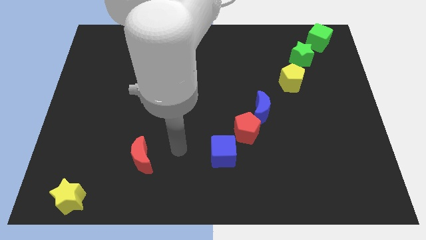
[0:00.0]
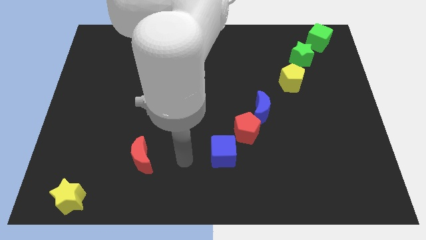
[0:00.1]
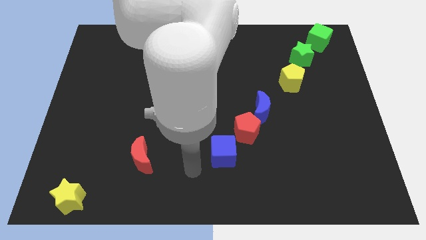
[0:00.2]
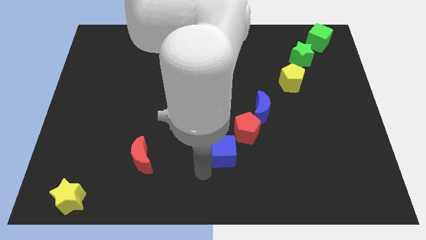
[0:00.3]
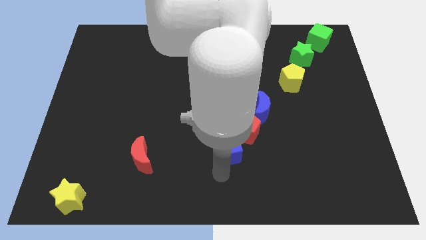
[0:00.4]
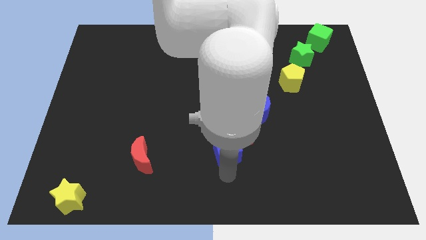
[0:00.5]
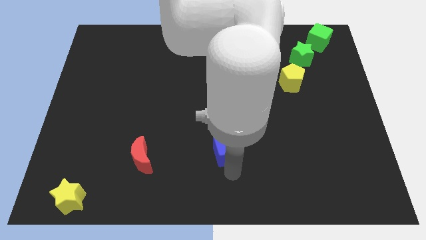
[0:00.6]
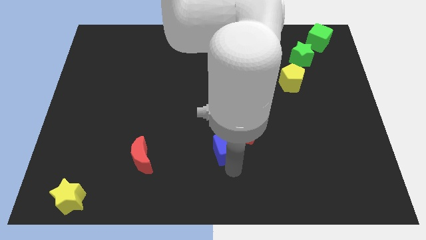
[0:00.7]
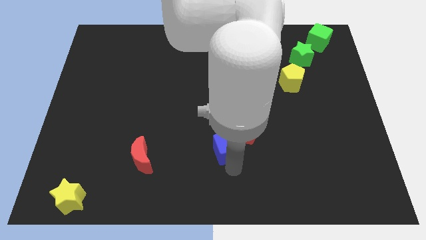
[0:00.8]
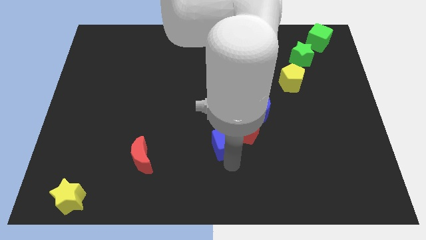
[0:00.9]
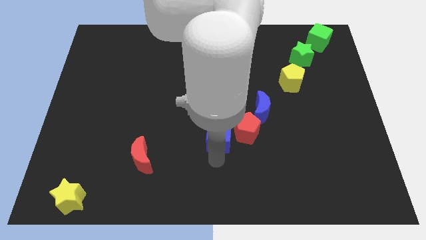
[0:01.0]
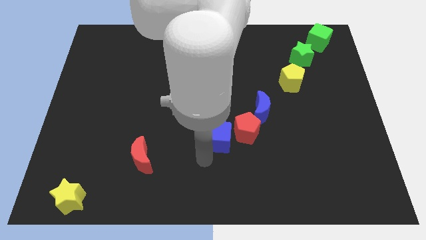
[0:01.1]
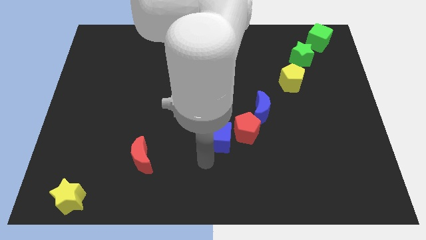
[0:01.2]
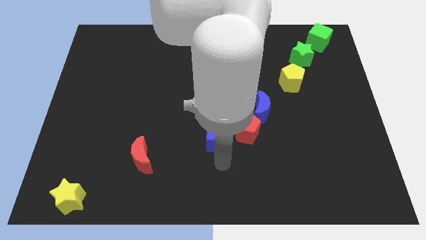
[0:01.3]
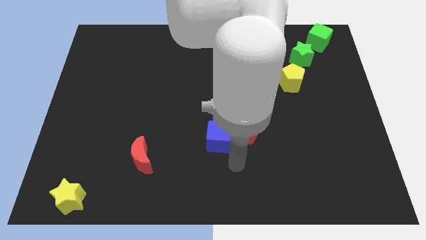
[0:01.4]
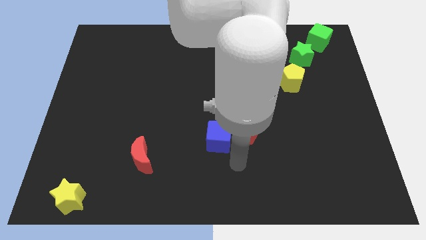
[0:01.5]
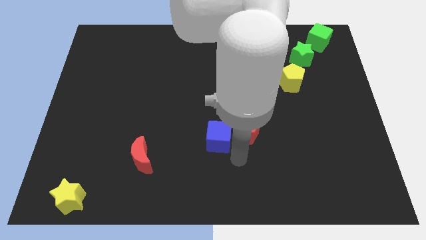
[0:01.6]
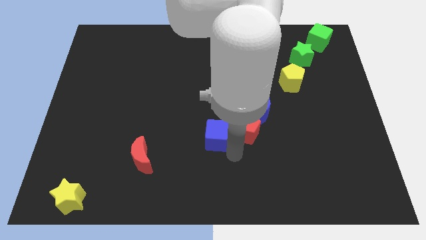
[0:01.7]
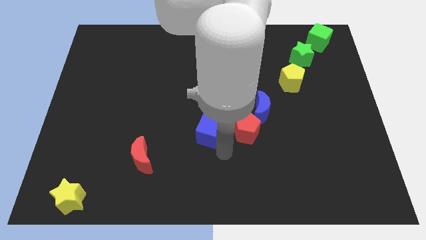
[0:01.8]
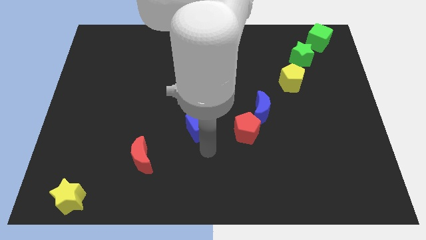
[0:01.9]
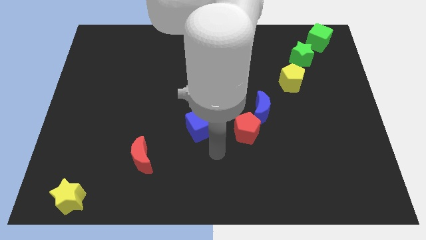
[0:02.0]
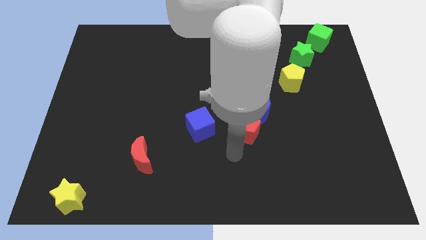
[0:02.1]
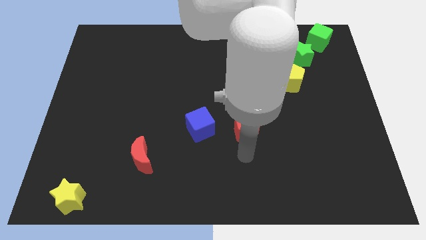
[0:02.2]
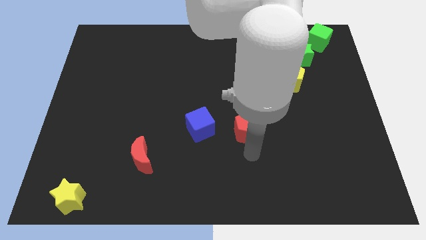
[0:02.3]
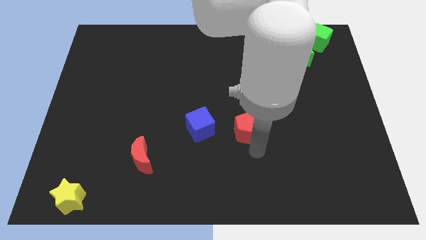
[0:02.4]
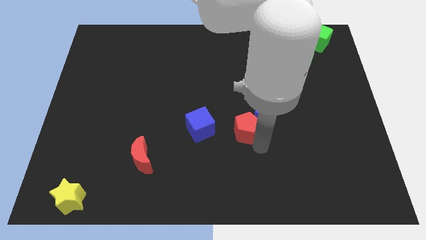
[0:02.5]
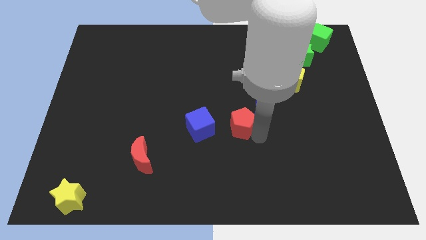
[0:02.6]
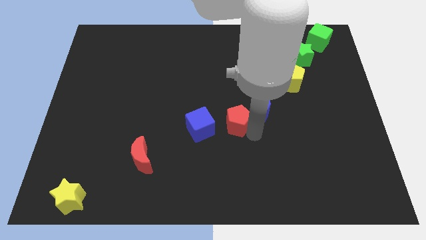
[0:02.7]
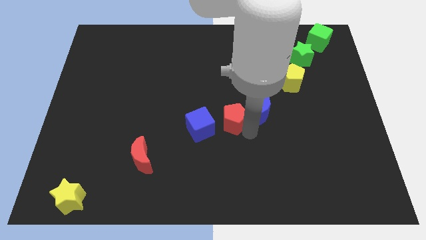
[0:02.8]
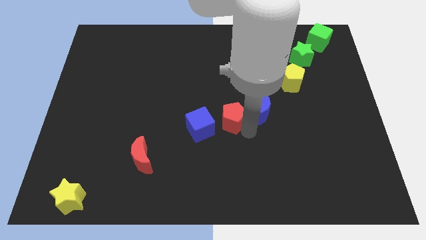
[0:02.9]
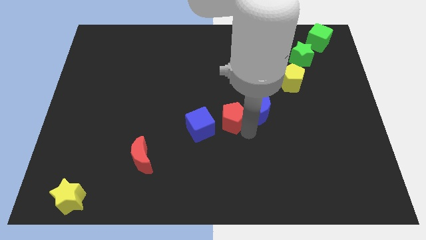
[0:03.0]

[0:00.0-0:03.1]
move the blue cube and red pentagon towards the center of the table

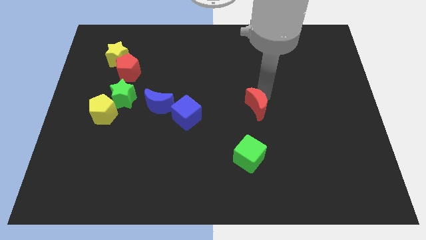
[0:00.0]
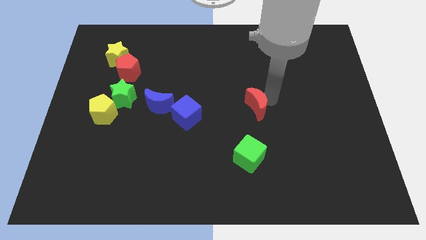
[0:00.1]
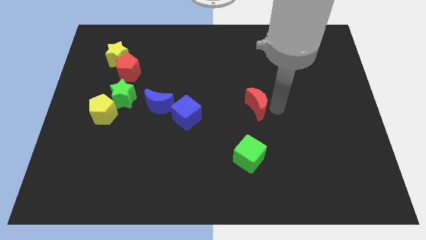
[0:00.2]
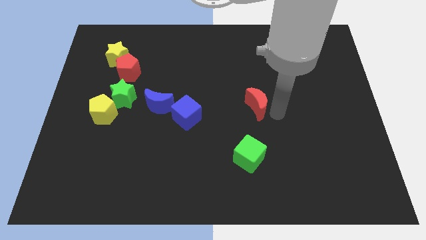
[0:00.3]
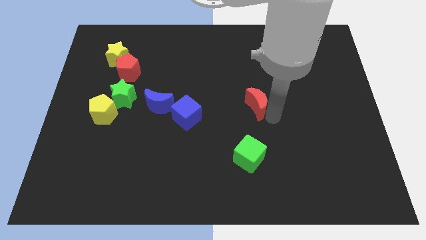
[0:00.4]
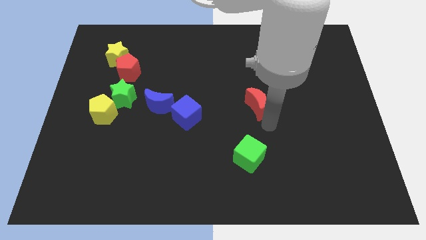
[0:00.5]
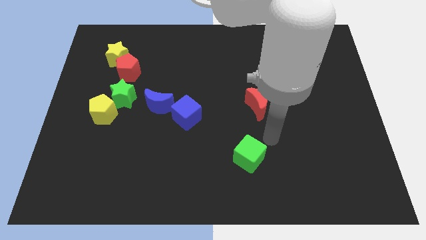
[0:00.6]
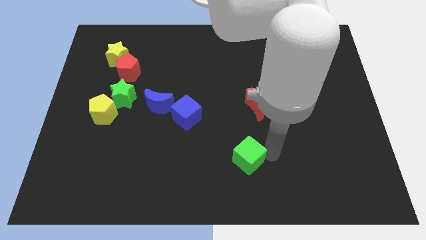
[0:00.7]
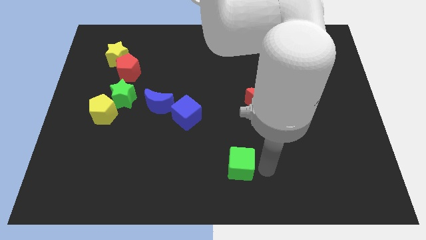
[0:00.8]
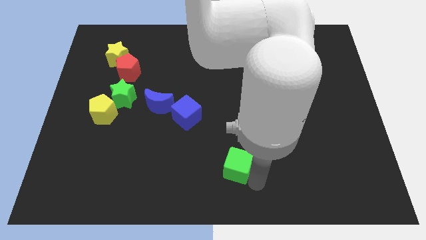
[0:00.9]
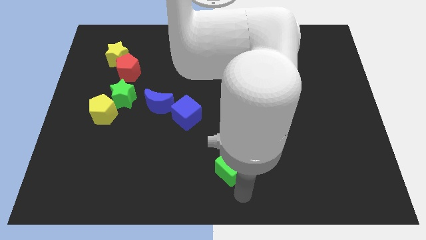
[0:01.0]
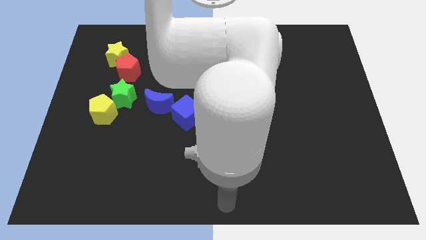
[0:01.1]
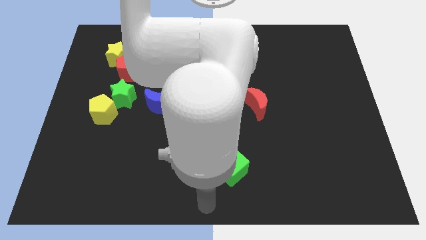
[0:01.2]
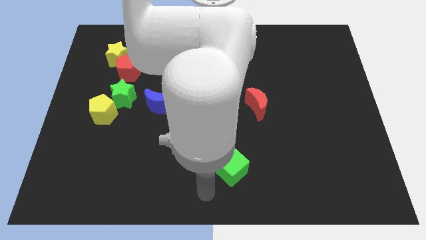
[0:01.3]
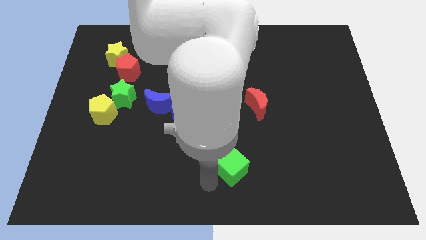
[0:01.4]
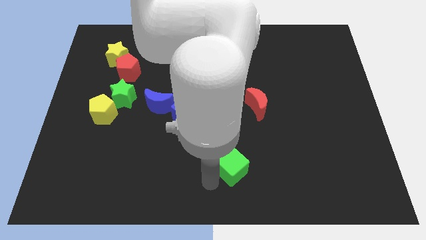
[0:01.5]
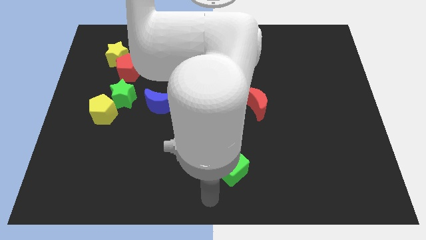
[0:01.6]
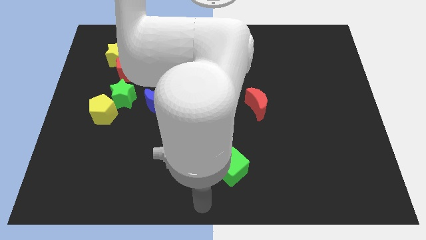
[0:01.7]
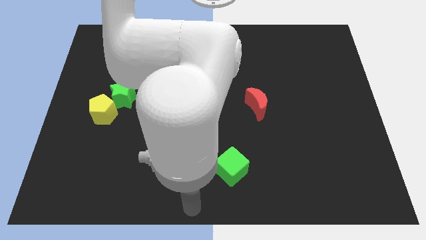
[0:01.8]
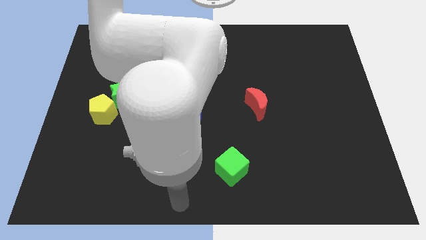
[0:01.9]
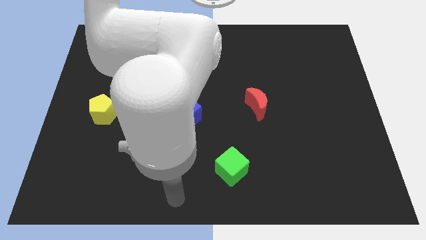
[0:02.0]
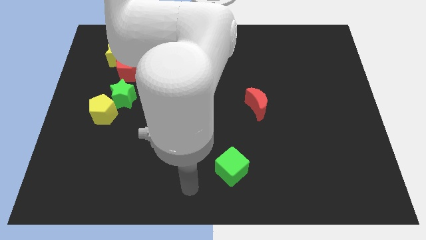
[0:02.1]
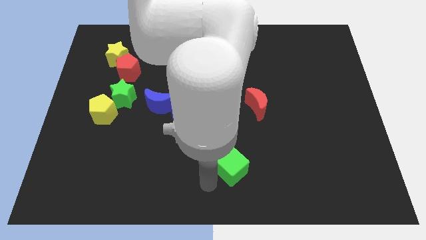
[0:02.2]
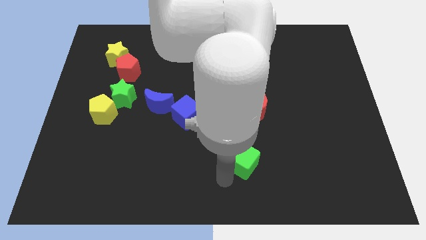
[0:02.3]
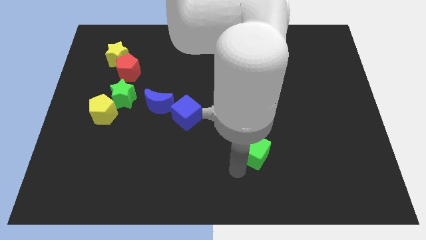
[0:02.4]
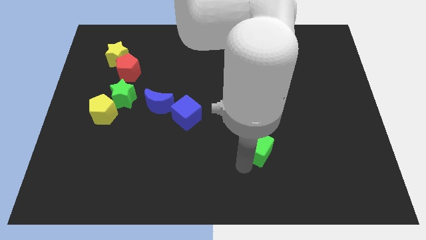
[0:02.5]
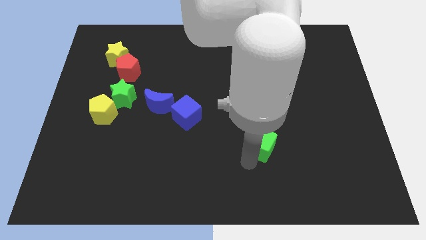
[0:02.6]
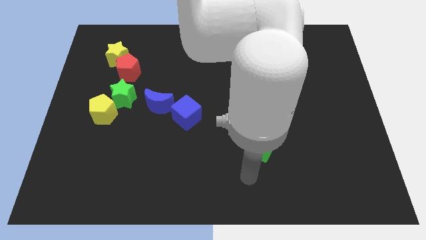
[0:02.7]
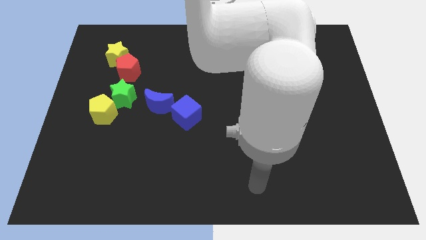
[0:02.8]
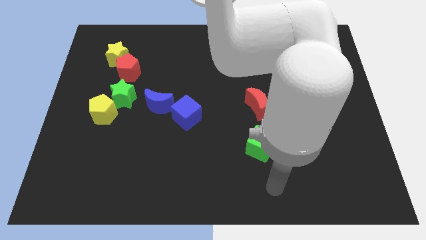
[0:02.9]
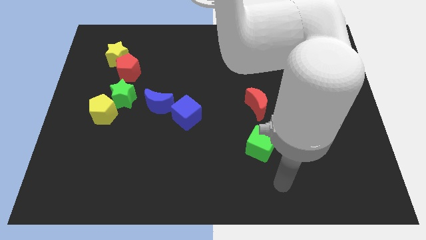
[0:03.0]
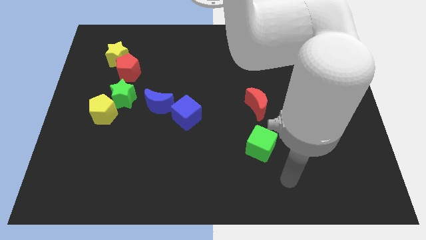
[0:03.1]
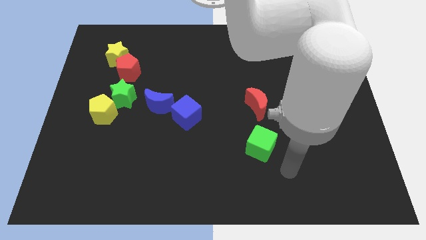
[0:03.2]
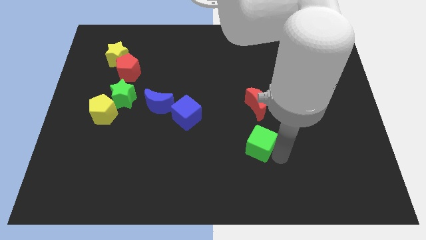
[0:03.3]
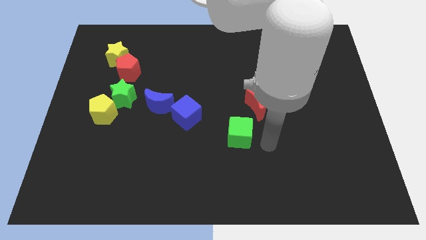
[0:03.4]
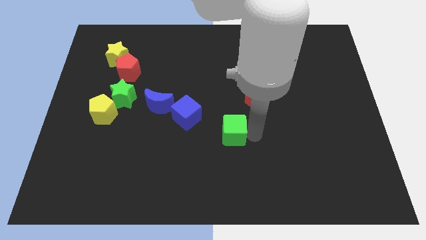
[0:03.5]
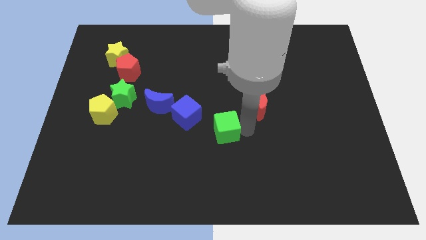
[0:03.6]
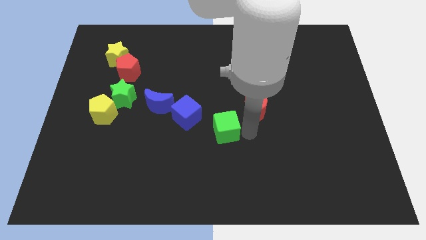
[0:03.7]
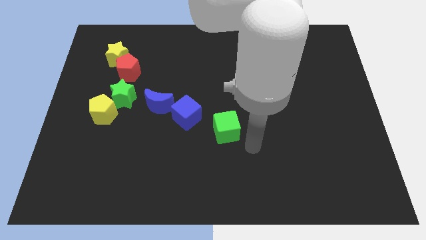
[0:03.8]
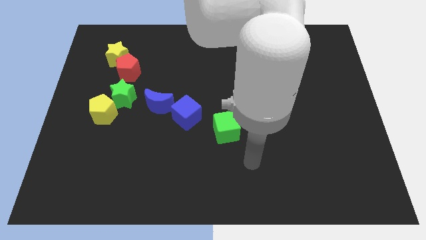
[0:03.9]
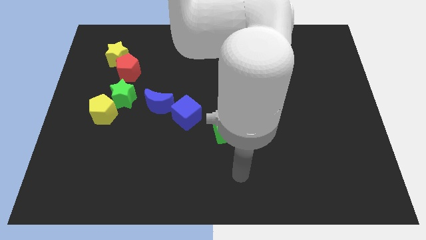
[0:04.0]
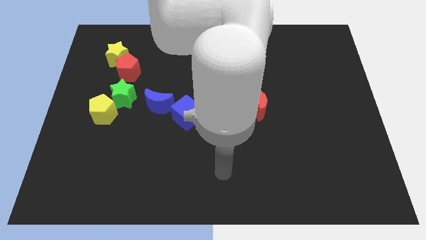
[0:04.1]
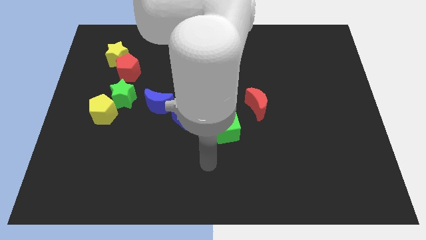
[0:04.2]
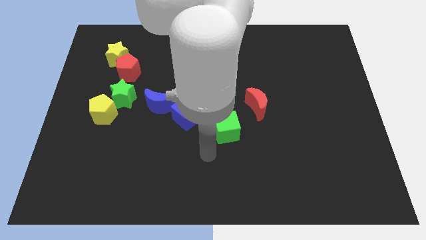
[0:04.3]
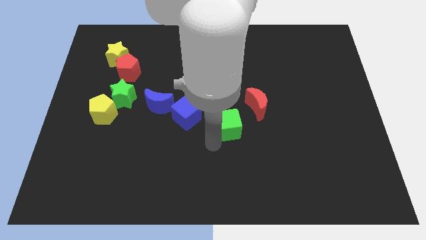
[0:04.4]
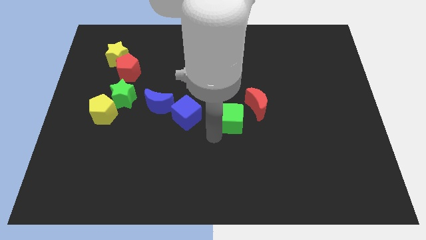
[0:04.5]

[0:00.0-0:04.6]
move the green cube to the right of the blue cube

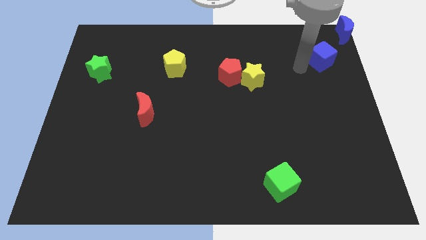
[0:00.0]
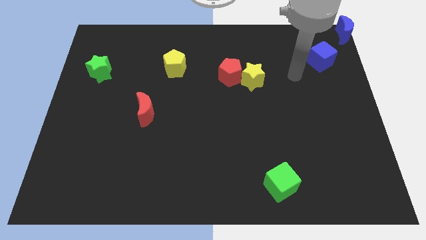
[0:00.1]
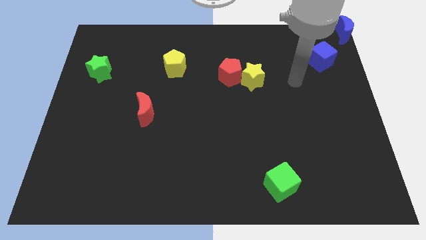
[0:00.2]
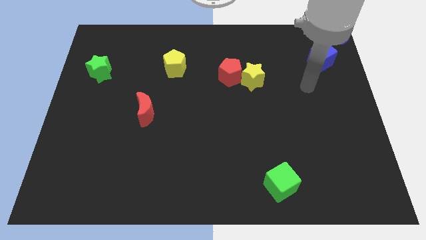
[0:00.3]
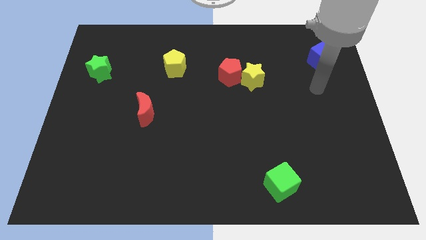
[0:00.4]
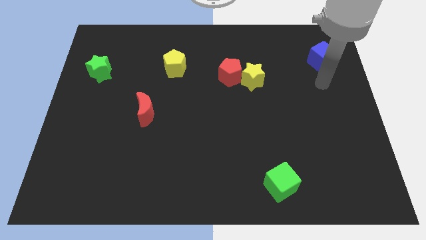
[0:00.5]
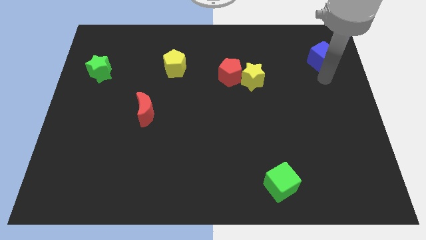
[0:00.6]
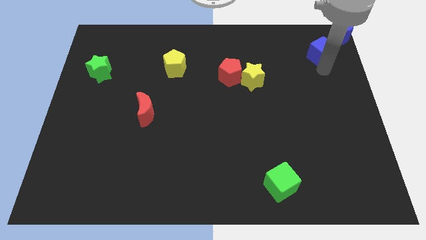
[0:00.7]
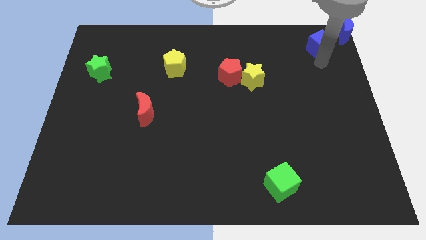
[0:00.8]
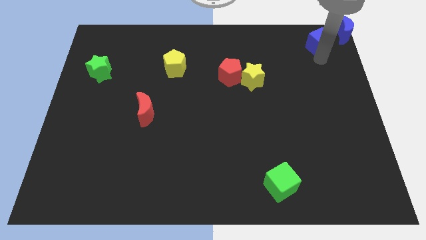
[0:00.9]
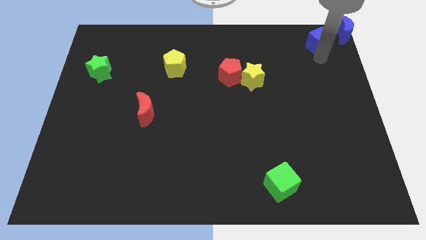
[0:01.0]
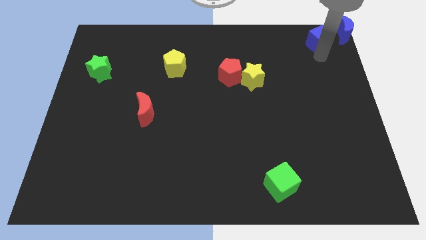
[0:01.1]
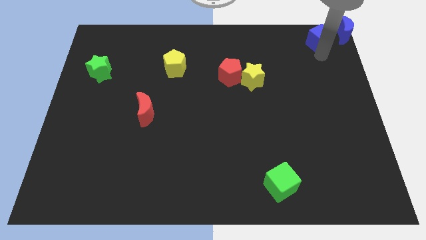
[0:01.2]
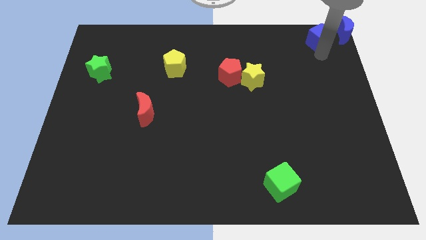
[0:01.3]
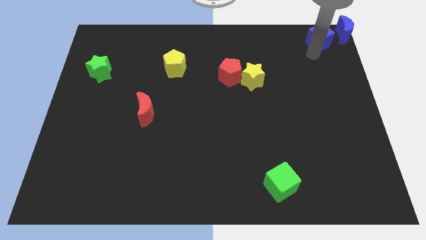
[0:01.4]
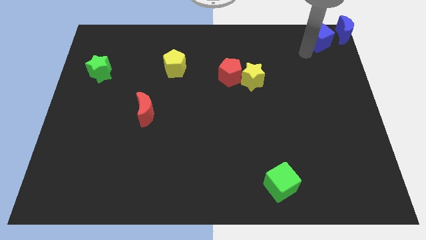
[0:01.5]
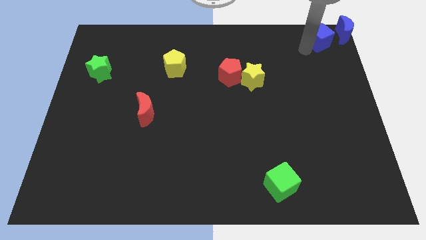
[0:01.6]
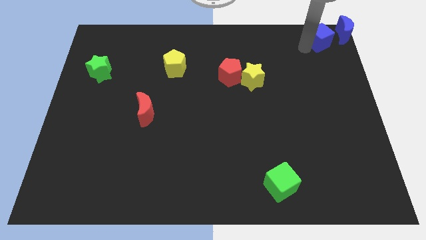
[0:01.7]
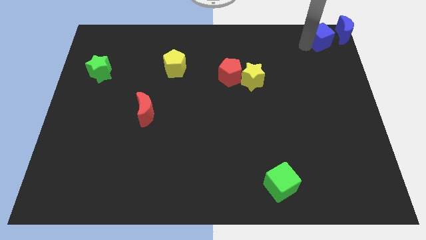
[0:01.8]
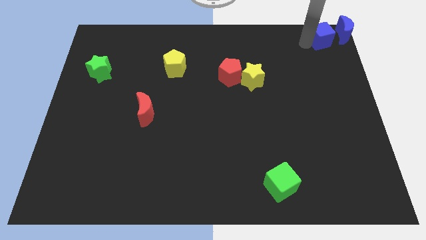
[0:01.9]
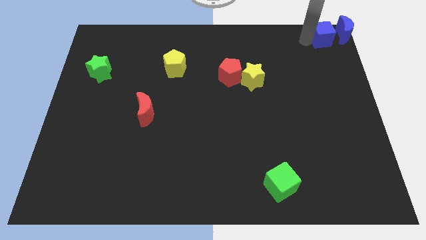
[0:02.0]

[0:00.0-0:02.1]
push blue cube to the top right
